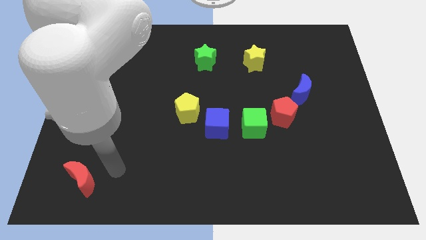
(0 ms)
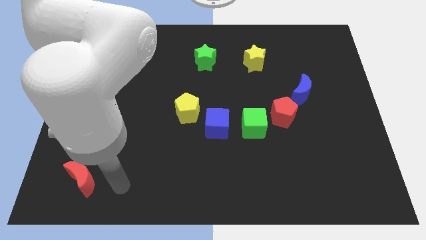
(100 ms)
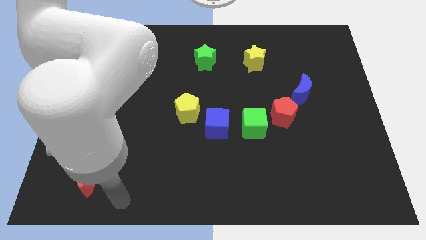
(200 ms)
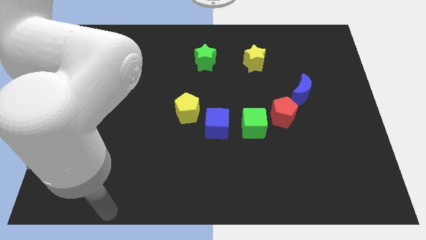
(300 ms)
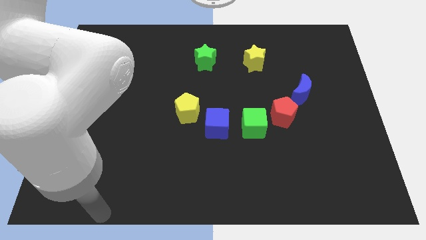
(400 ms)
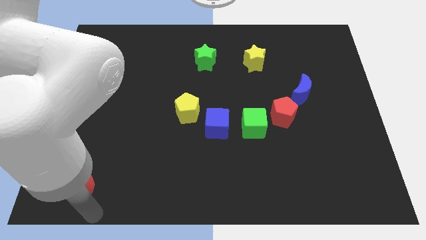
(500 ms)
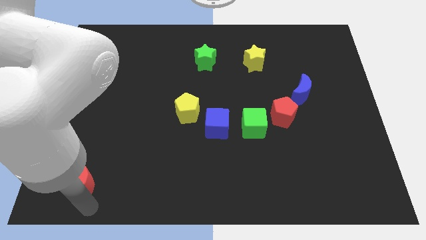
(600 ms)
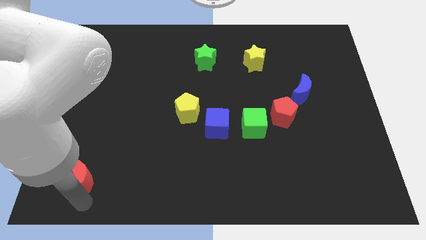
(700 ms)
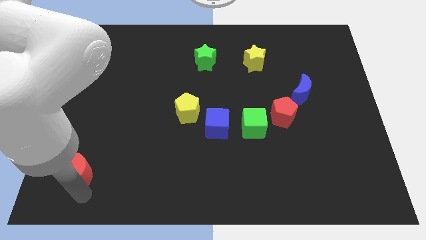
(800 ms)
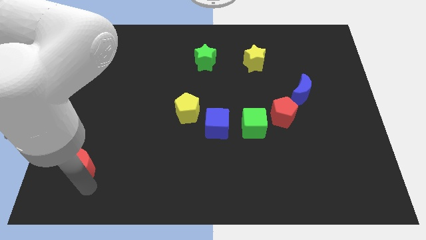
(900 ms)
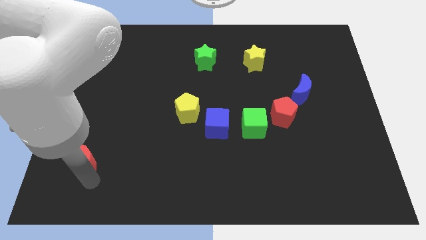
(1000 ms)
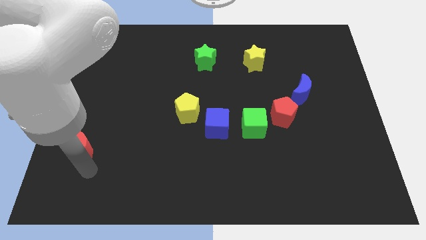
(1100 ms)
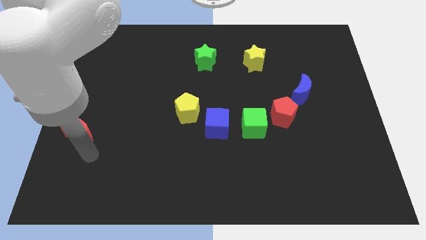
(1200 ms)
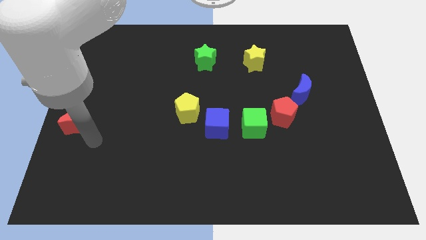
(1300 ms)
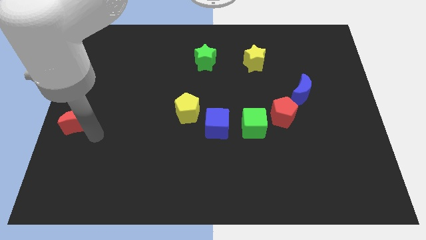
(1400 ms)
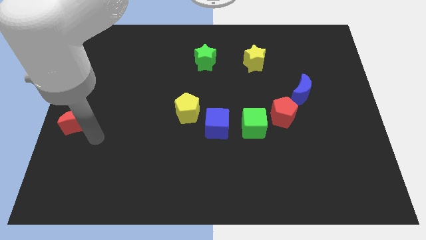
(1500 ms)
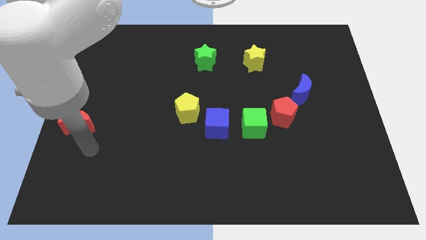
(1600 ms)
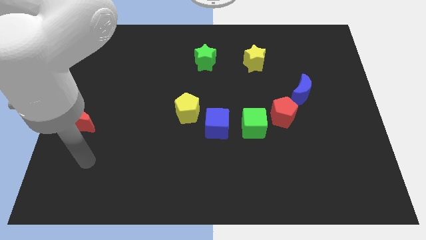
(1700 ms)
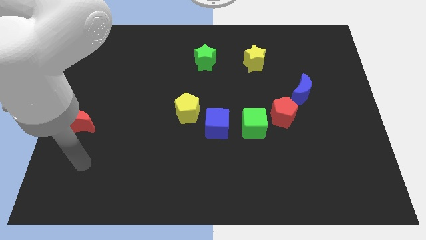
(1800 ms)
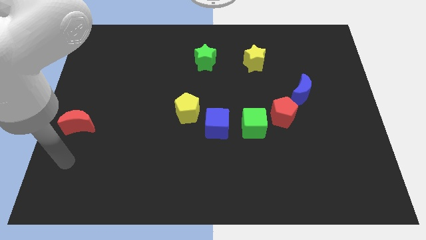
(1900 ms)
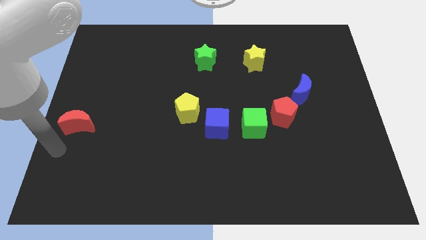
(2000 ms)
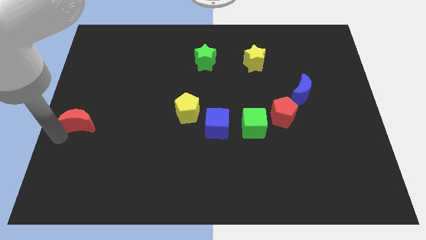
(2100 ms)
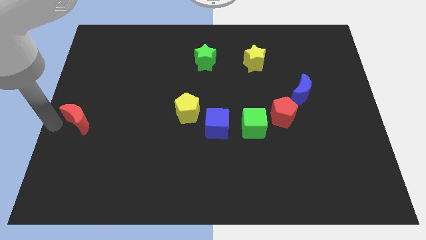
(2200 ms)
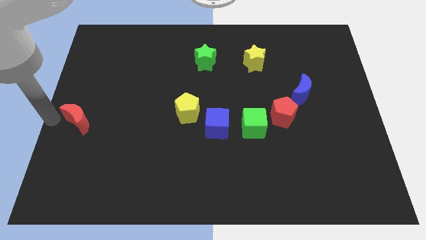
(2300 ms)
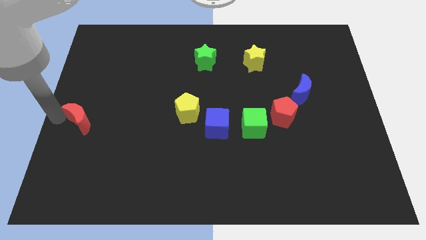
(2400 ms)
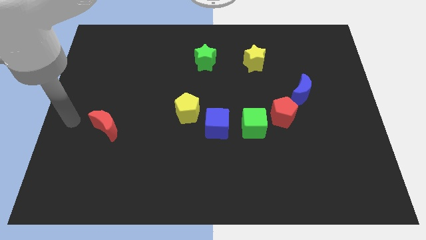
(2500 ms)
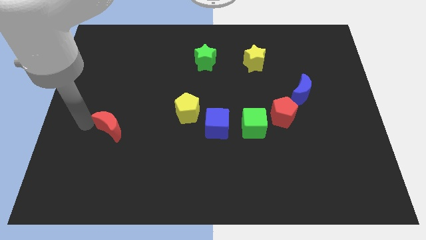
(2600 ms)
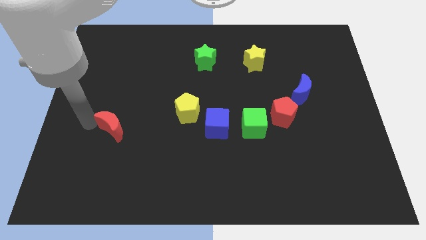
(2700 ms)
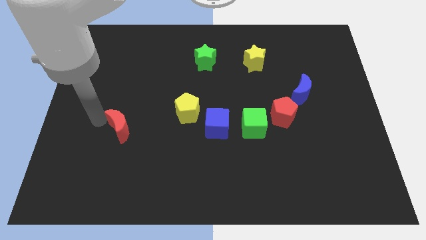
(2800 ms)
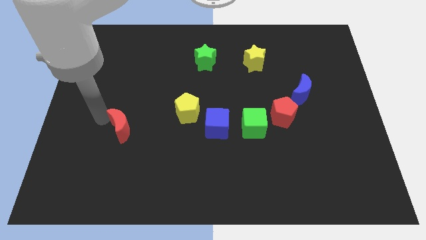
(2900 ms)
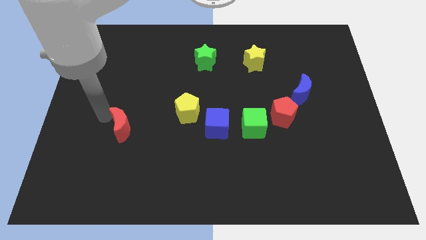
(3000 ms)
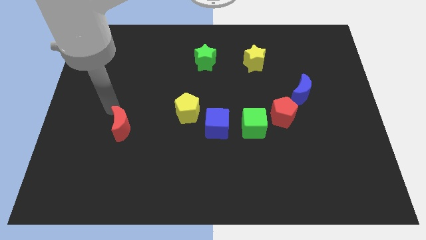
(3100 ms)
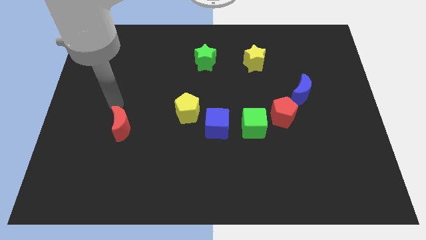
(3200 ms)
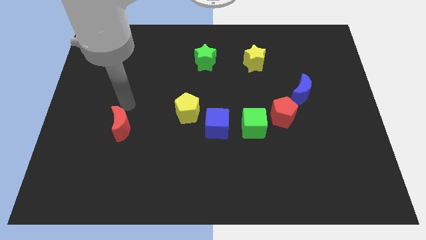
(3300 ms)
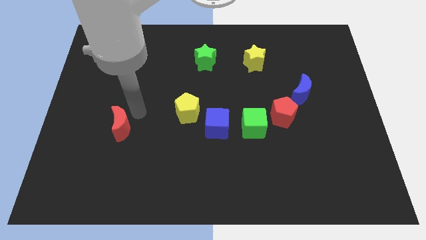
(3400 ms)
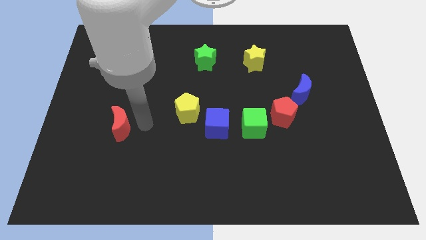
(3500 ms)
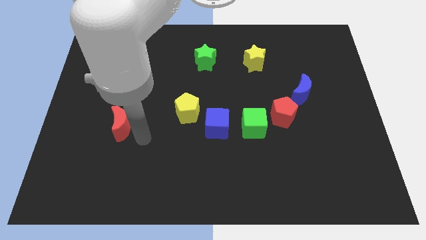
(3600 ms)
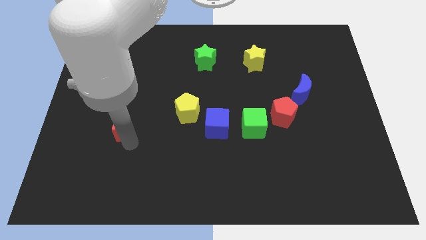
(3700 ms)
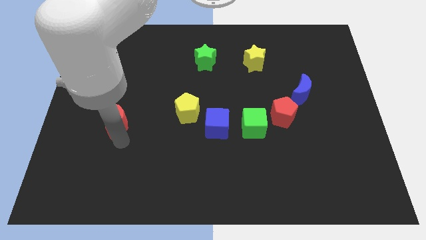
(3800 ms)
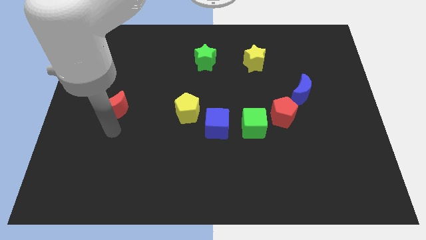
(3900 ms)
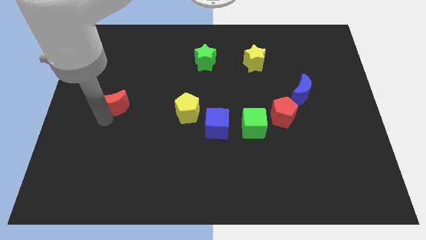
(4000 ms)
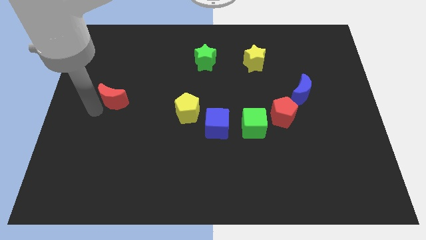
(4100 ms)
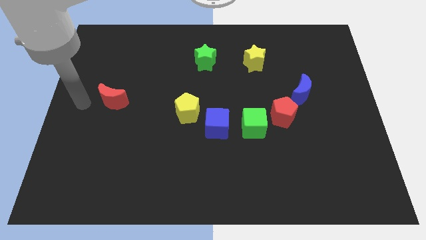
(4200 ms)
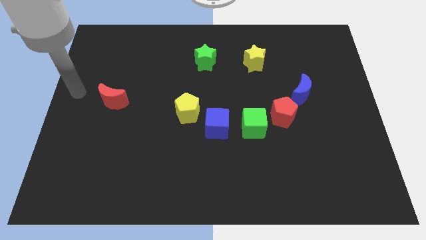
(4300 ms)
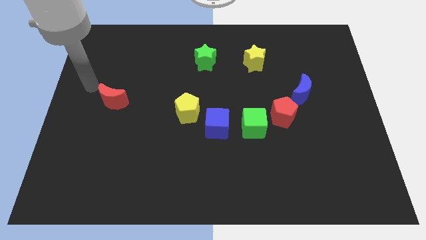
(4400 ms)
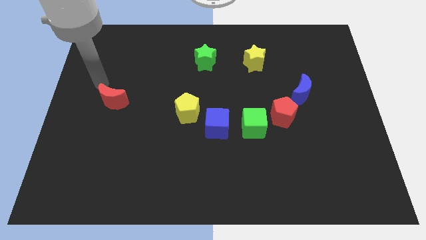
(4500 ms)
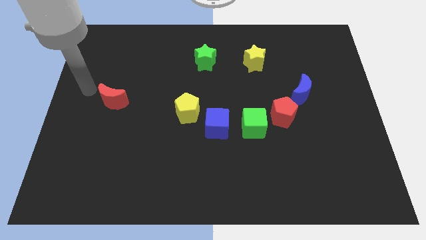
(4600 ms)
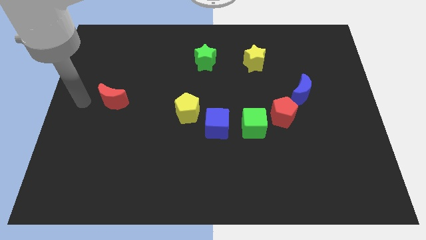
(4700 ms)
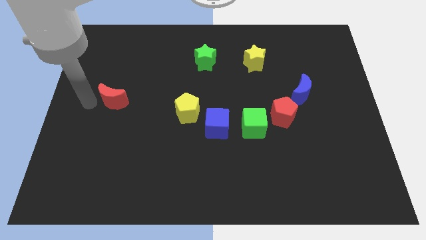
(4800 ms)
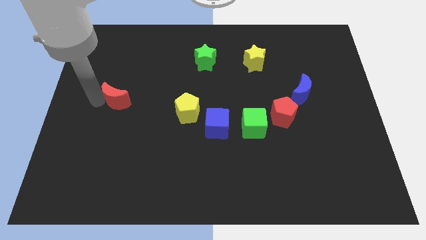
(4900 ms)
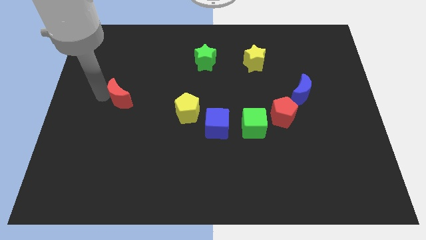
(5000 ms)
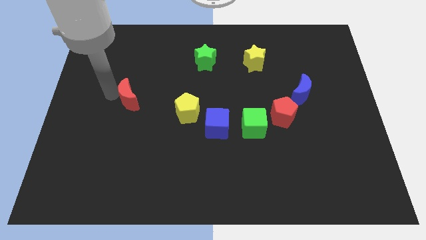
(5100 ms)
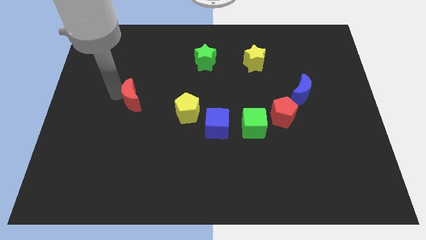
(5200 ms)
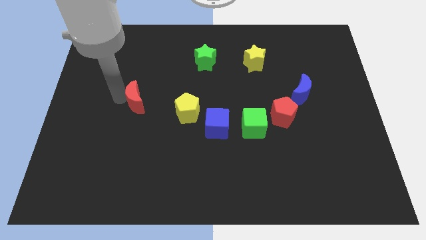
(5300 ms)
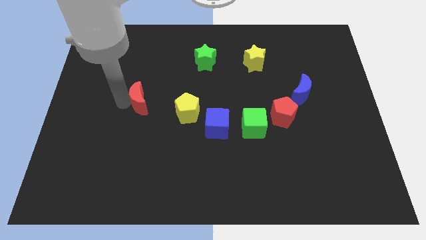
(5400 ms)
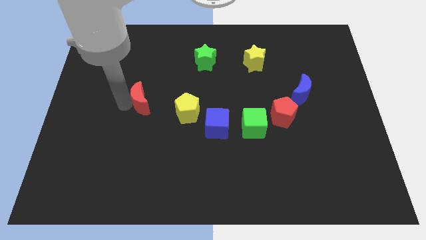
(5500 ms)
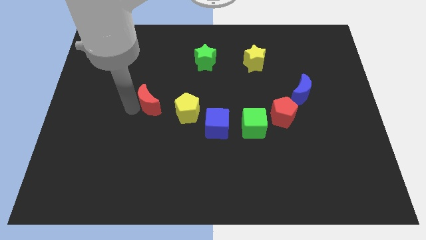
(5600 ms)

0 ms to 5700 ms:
place the red moon to the left of the yellow pentagon

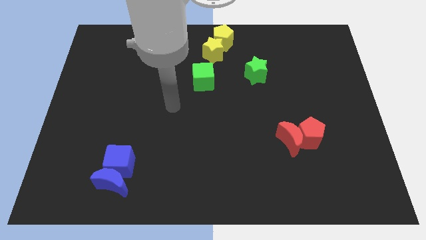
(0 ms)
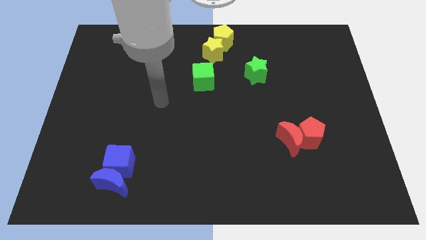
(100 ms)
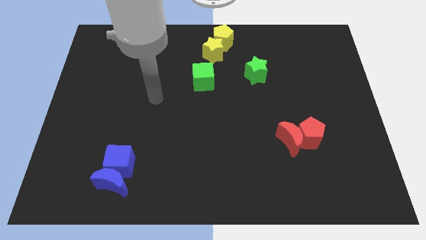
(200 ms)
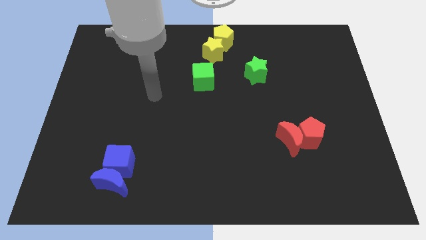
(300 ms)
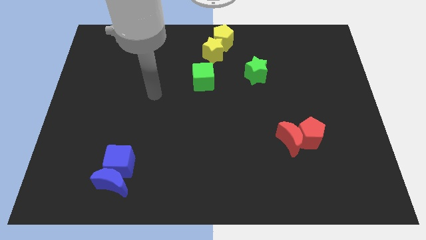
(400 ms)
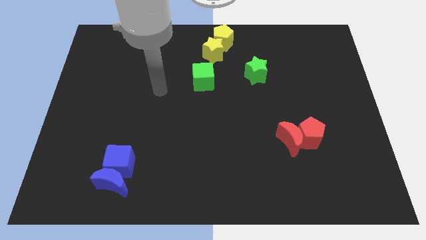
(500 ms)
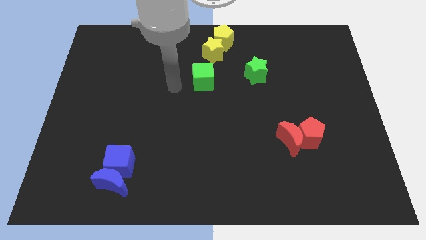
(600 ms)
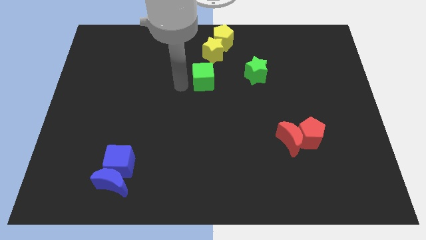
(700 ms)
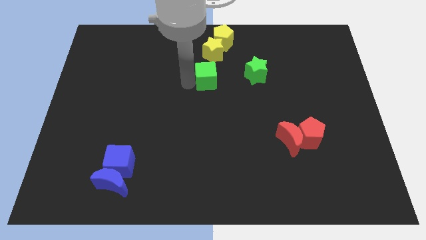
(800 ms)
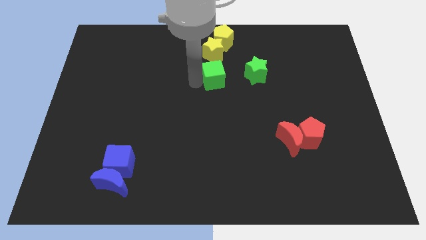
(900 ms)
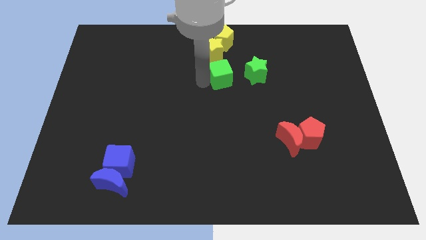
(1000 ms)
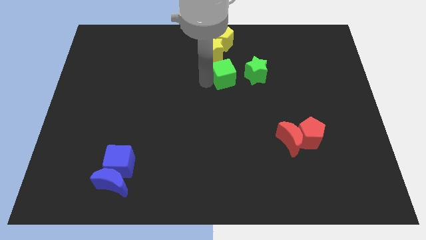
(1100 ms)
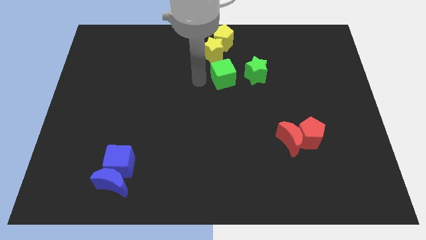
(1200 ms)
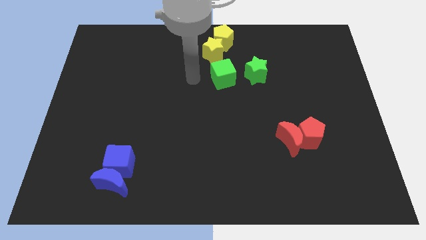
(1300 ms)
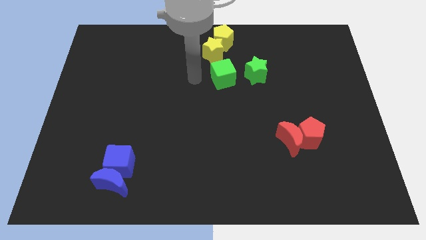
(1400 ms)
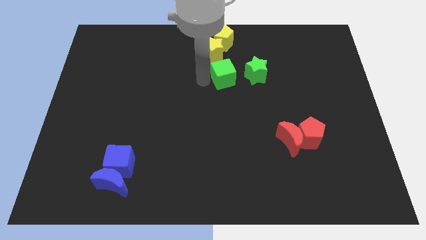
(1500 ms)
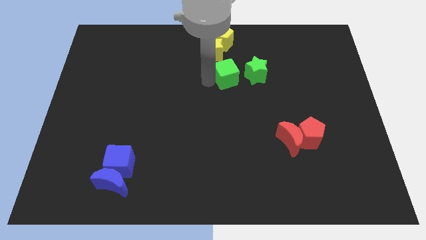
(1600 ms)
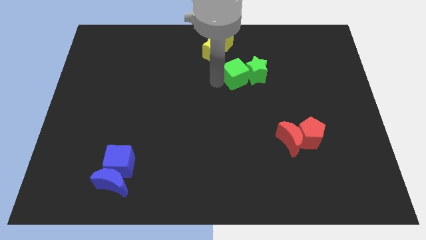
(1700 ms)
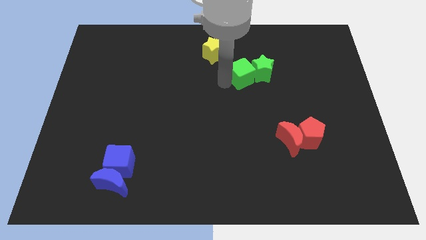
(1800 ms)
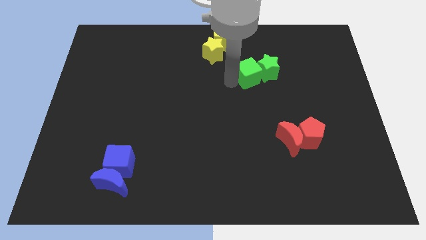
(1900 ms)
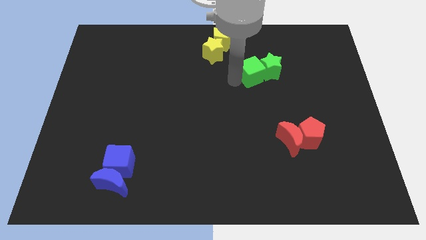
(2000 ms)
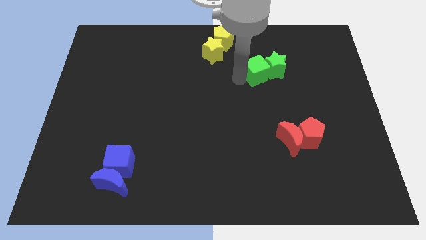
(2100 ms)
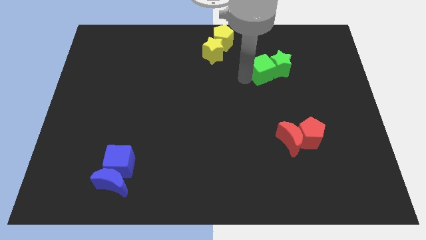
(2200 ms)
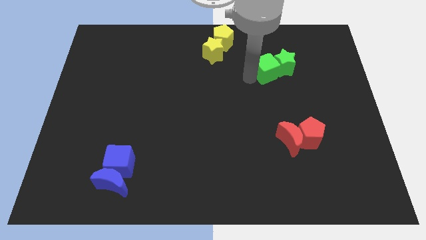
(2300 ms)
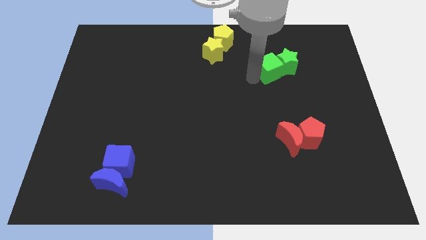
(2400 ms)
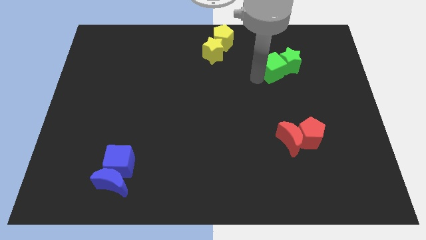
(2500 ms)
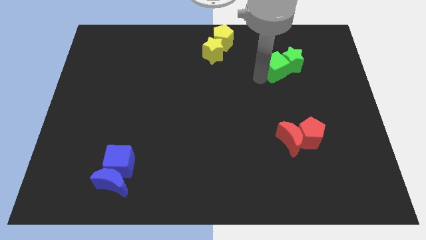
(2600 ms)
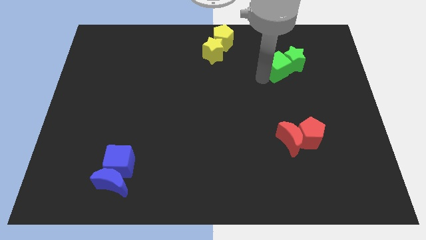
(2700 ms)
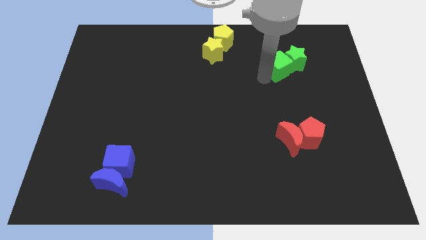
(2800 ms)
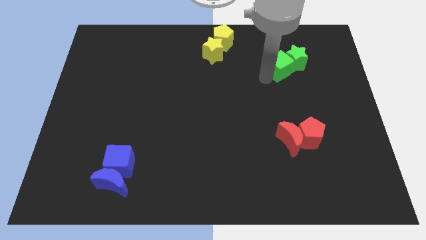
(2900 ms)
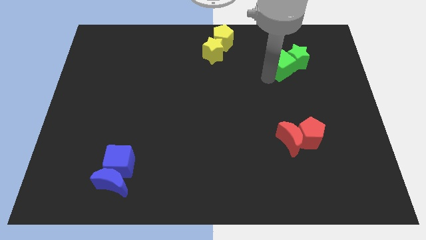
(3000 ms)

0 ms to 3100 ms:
push the green cube into the green star

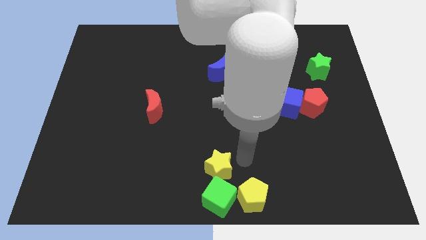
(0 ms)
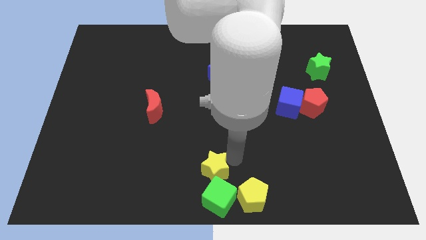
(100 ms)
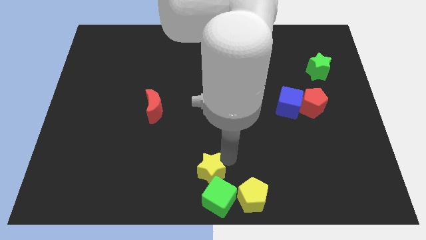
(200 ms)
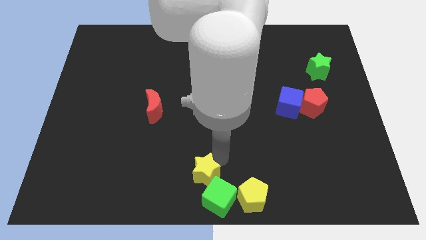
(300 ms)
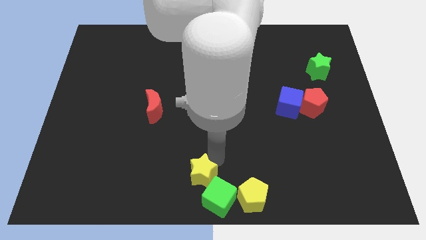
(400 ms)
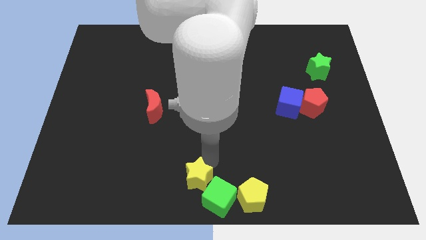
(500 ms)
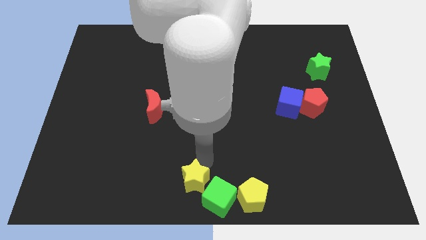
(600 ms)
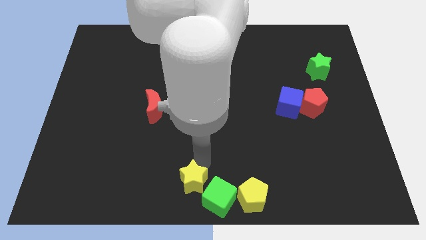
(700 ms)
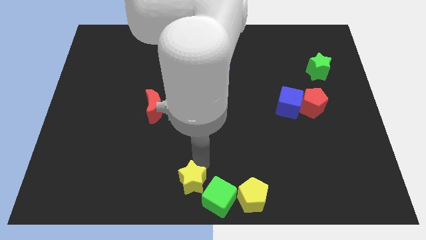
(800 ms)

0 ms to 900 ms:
move yellow star left above the green cube
